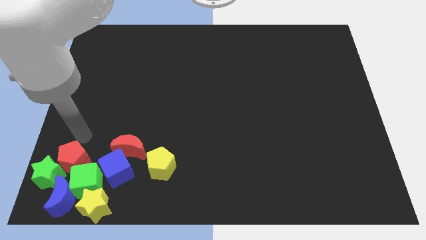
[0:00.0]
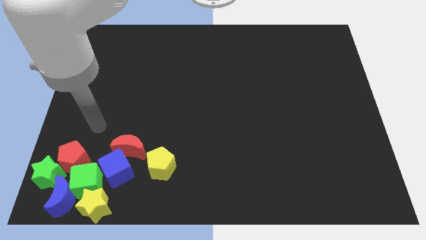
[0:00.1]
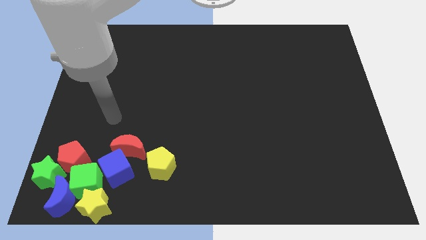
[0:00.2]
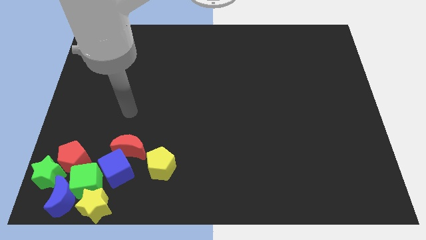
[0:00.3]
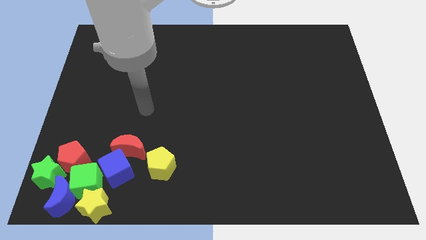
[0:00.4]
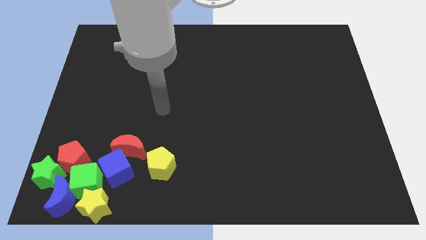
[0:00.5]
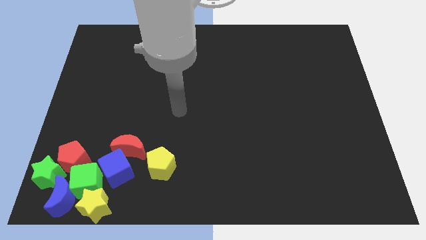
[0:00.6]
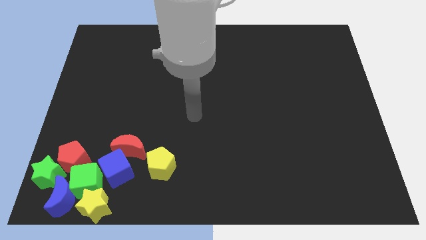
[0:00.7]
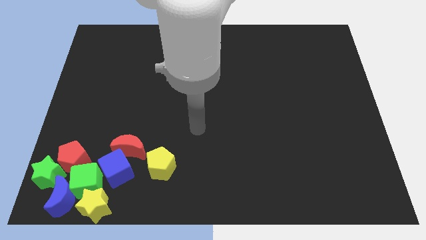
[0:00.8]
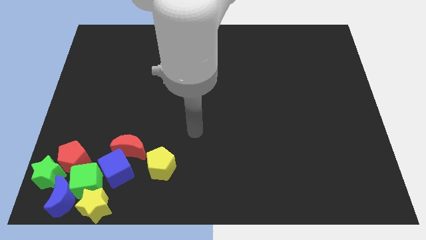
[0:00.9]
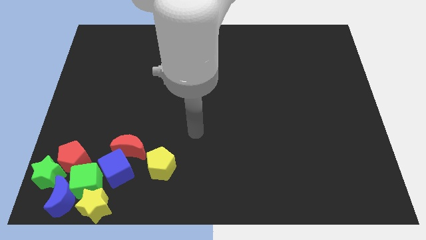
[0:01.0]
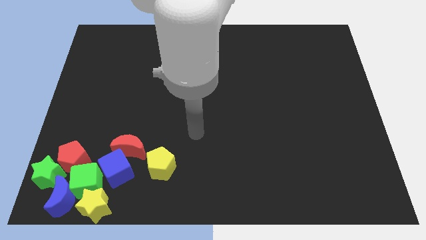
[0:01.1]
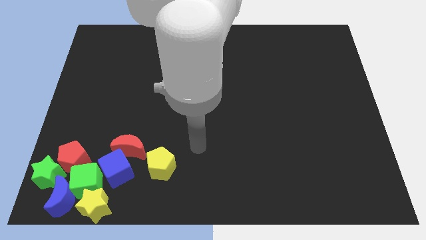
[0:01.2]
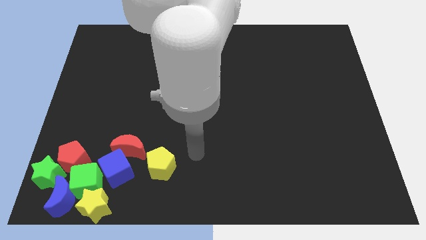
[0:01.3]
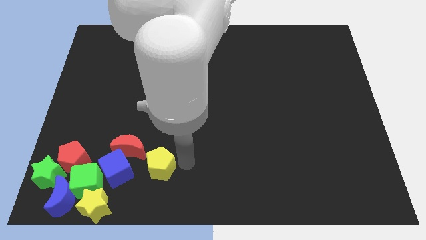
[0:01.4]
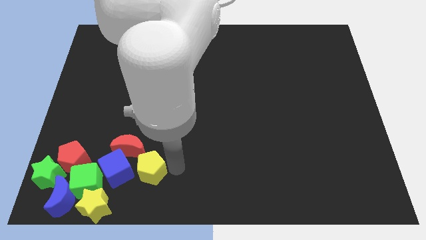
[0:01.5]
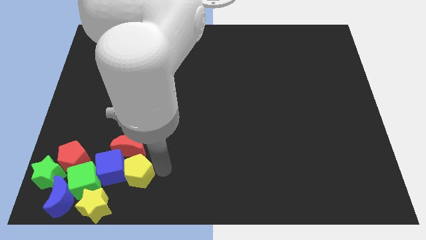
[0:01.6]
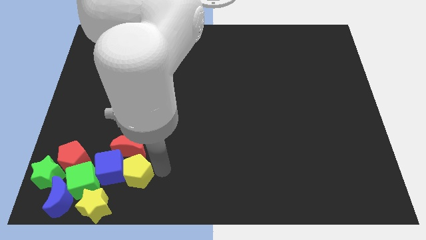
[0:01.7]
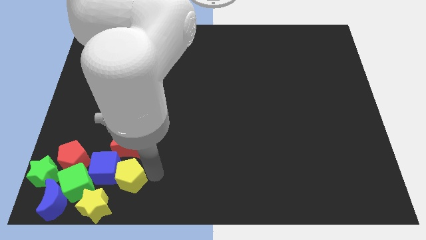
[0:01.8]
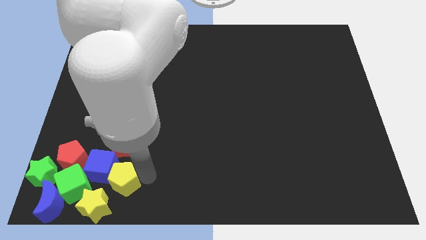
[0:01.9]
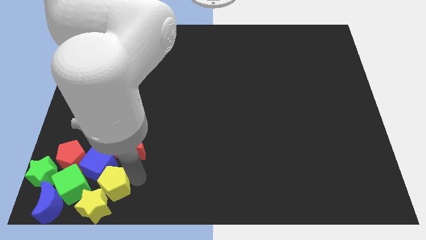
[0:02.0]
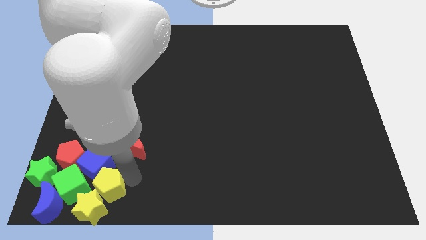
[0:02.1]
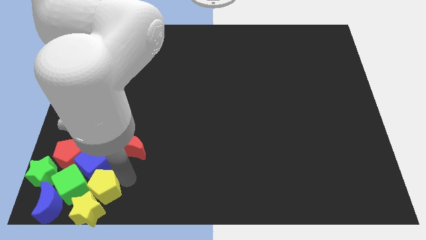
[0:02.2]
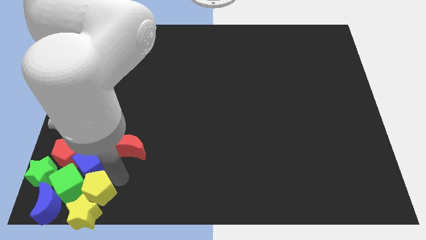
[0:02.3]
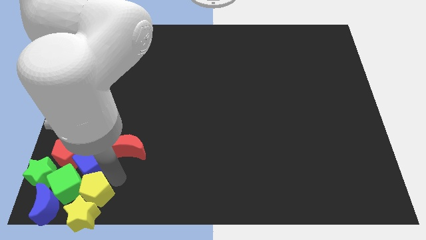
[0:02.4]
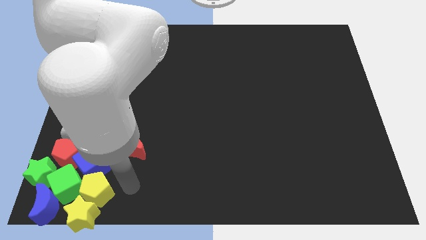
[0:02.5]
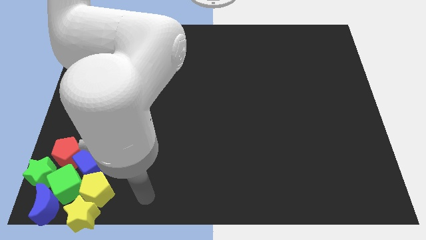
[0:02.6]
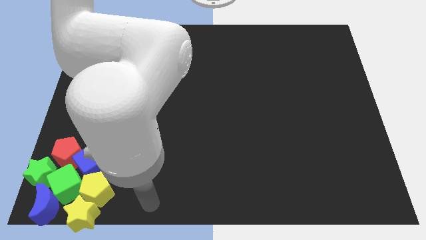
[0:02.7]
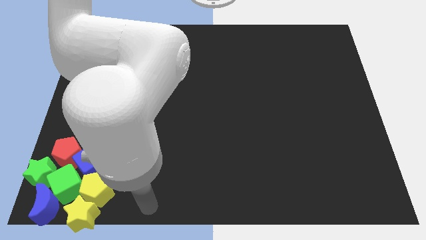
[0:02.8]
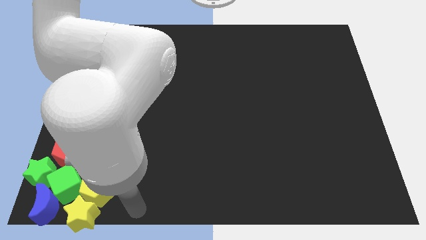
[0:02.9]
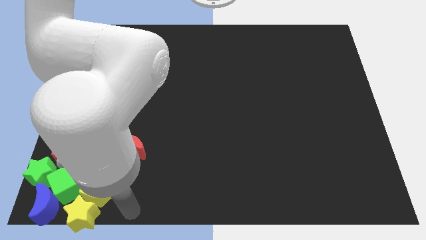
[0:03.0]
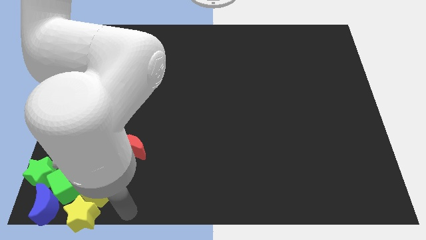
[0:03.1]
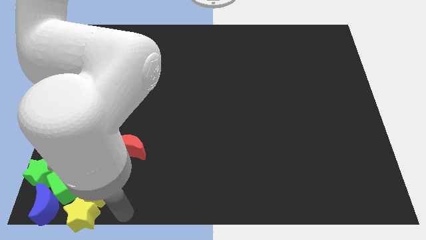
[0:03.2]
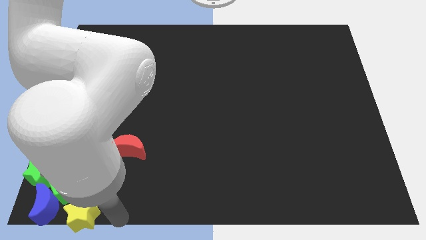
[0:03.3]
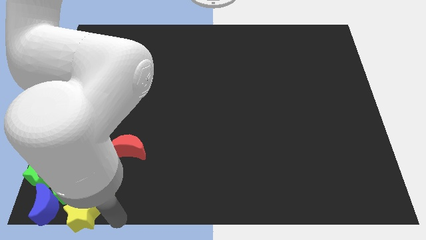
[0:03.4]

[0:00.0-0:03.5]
push yellow pentagon into the group of all blocks

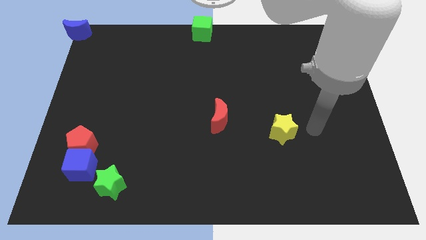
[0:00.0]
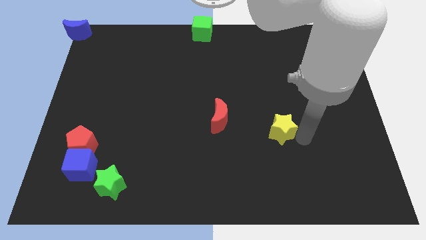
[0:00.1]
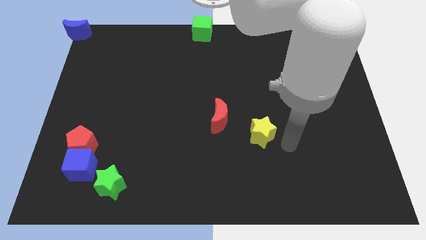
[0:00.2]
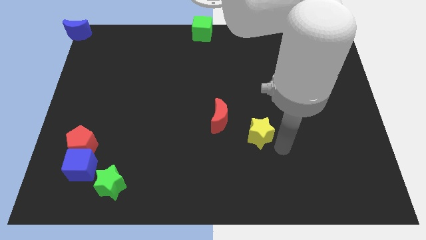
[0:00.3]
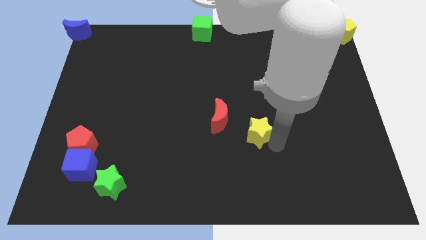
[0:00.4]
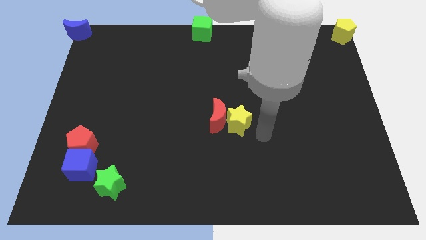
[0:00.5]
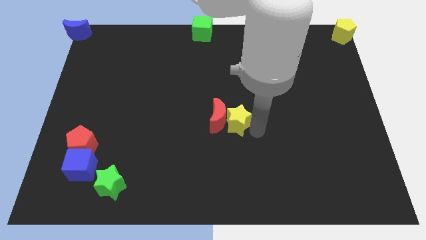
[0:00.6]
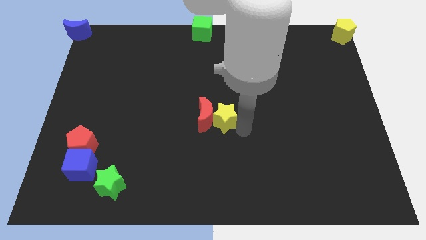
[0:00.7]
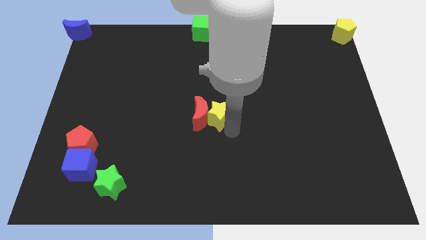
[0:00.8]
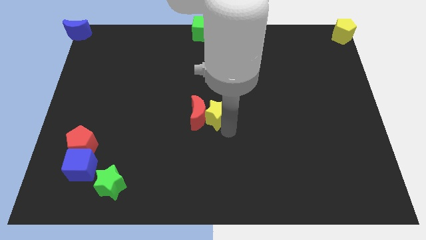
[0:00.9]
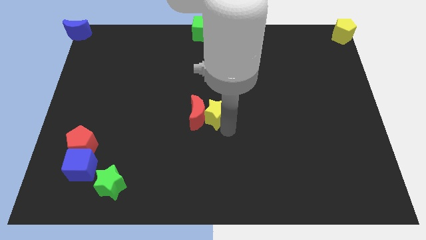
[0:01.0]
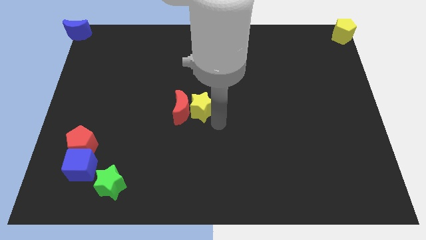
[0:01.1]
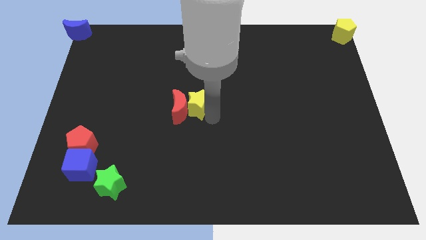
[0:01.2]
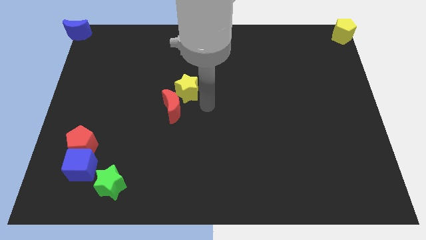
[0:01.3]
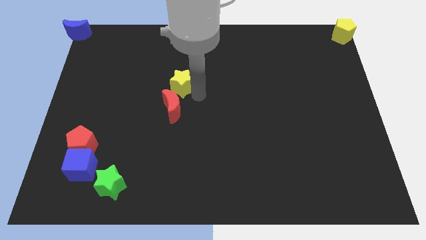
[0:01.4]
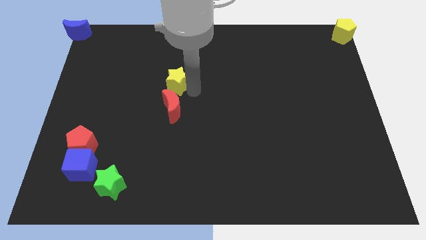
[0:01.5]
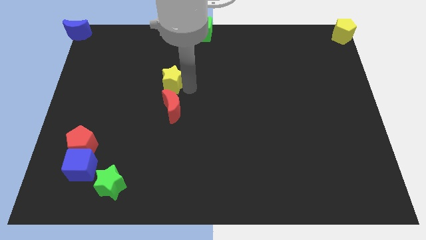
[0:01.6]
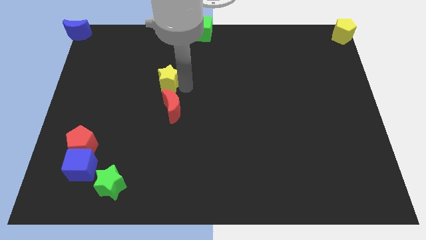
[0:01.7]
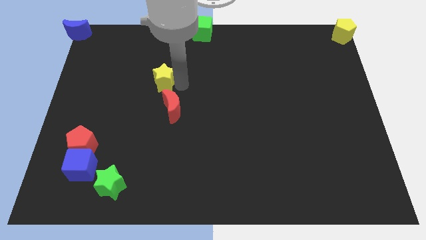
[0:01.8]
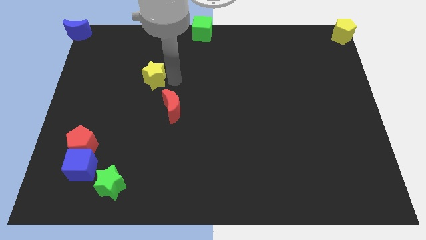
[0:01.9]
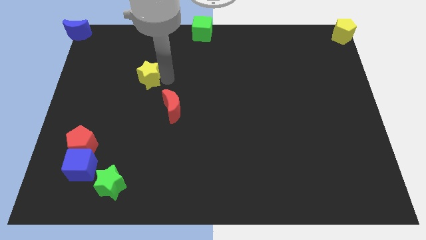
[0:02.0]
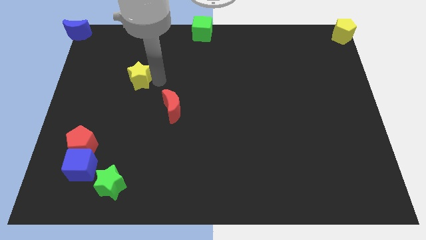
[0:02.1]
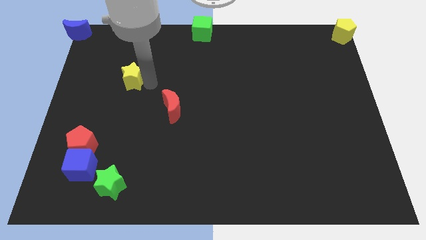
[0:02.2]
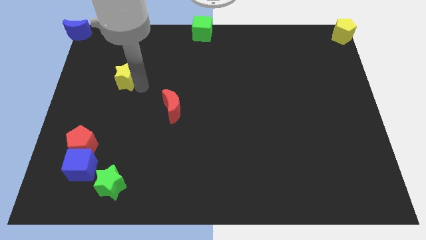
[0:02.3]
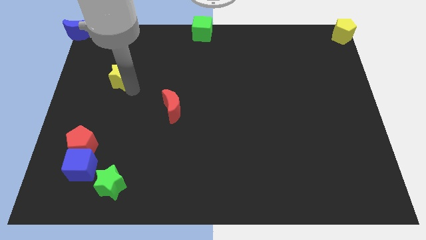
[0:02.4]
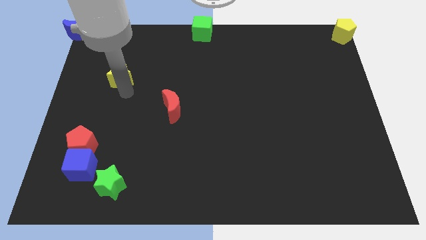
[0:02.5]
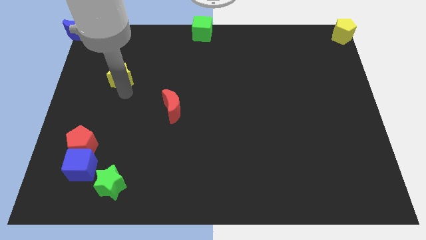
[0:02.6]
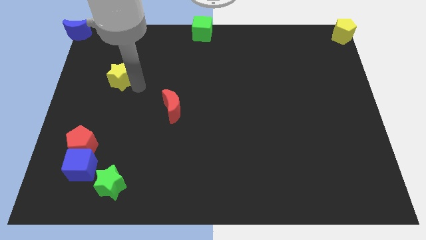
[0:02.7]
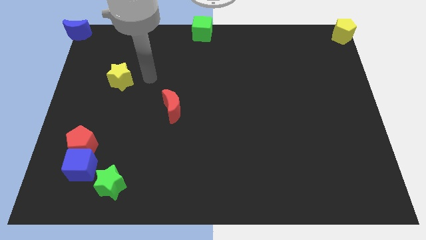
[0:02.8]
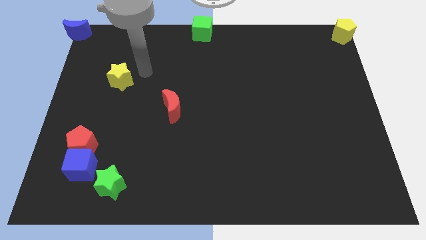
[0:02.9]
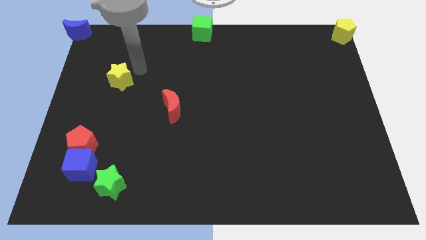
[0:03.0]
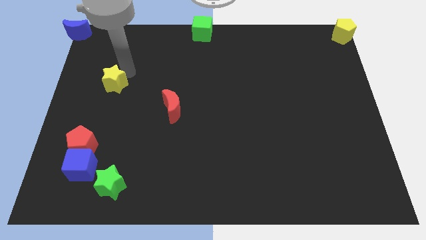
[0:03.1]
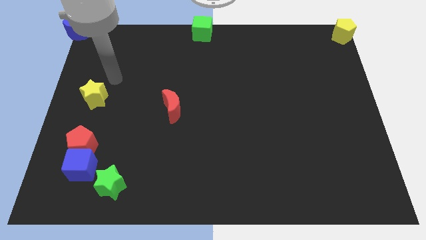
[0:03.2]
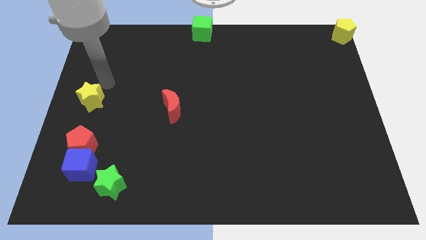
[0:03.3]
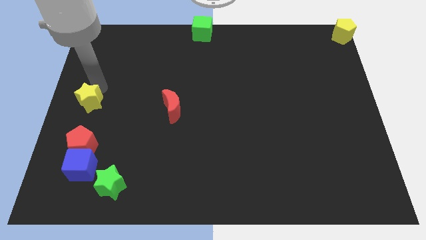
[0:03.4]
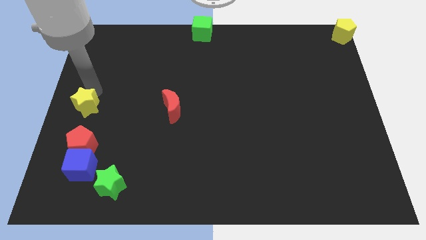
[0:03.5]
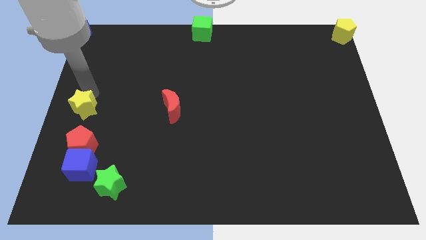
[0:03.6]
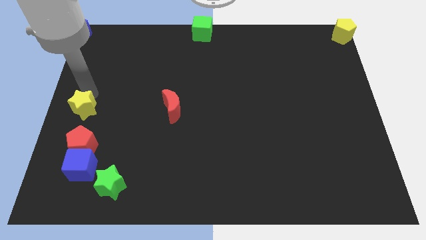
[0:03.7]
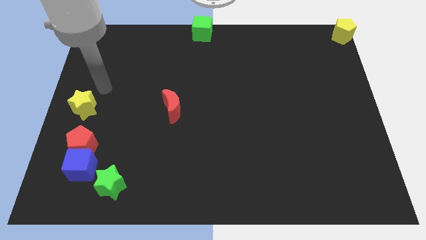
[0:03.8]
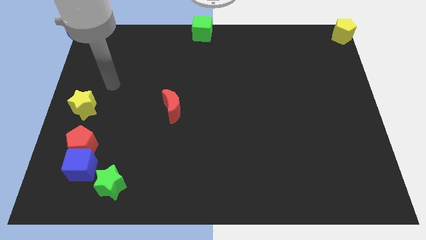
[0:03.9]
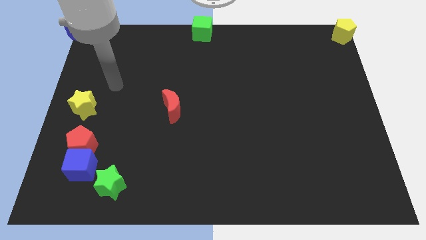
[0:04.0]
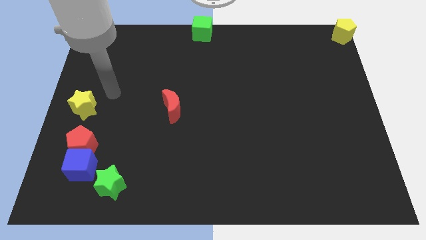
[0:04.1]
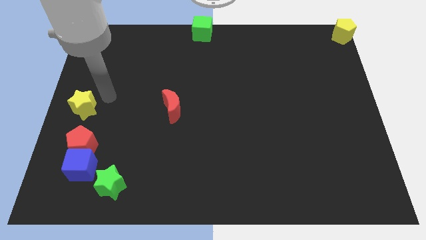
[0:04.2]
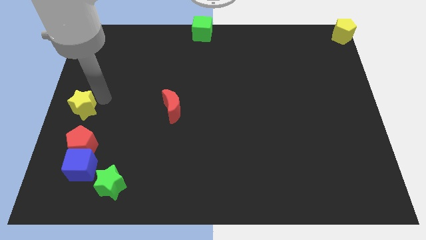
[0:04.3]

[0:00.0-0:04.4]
push the yellow star to the center left of the board

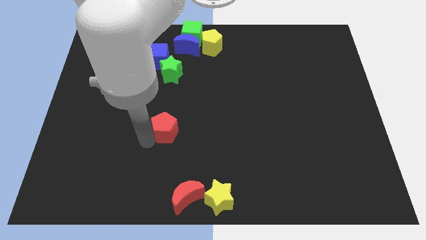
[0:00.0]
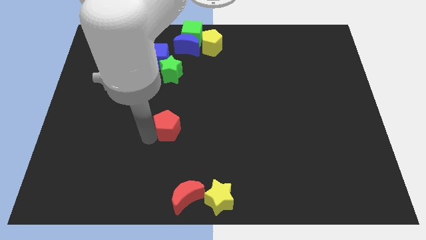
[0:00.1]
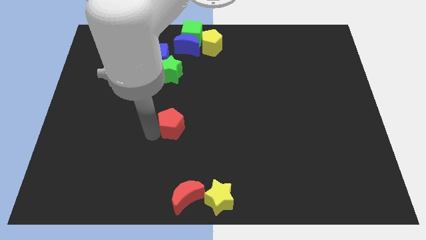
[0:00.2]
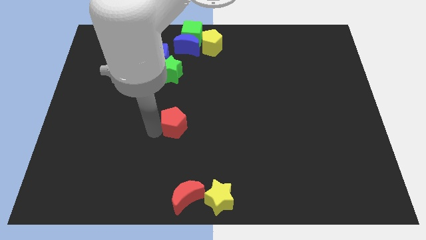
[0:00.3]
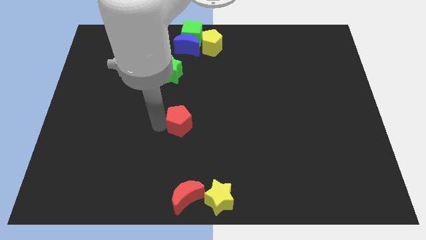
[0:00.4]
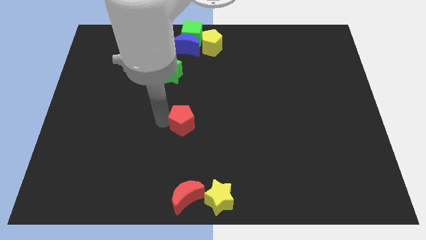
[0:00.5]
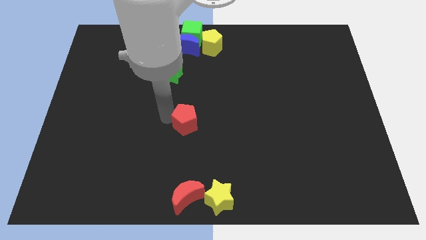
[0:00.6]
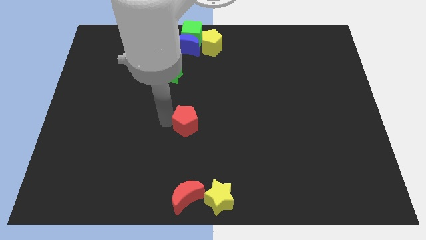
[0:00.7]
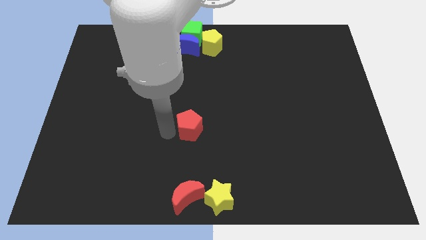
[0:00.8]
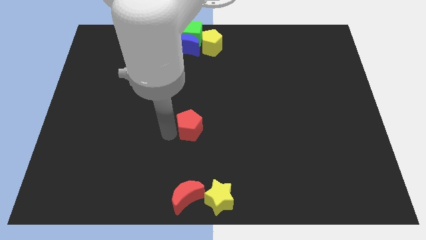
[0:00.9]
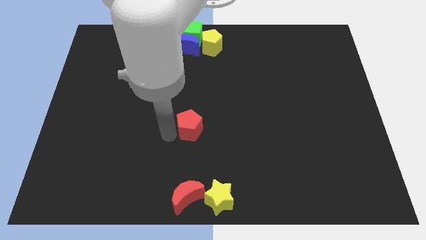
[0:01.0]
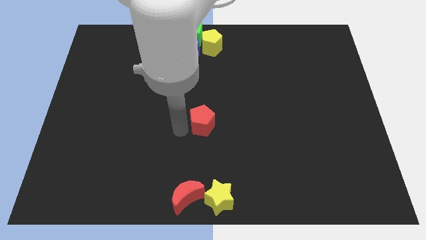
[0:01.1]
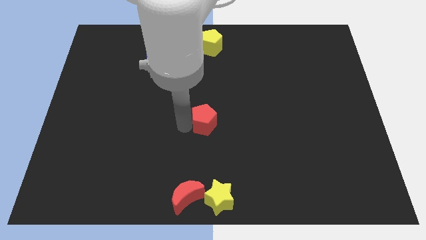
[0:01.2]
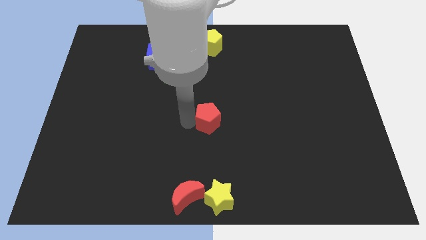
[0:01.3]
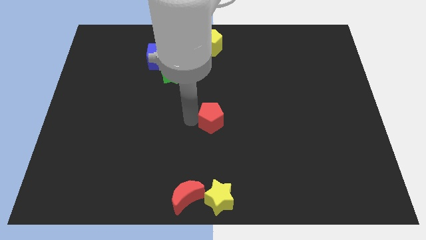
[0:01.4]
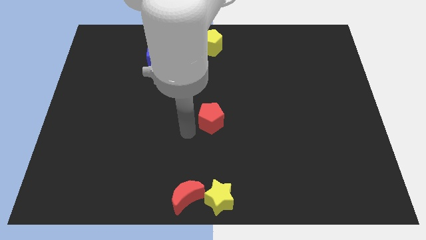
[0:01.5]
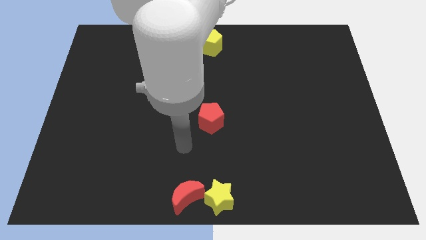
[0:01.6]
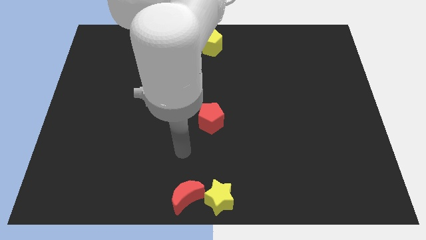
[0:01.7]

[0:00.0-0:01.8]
put the red pentagon vertically above the yellow star
